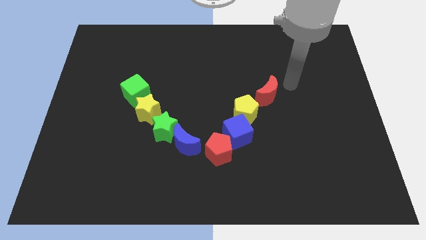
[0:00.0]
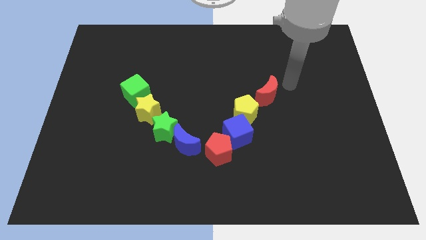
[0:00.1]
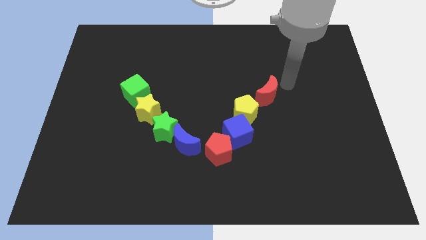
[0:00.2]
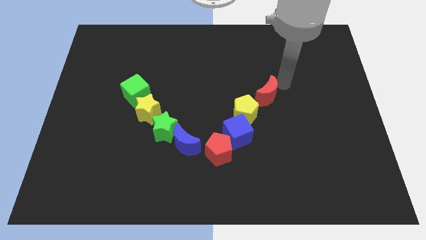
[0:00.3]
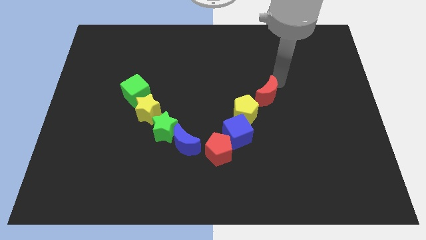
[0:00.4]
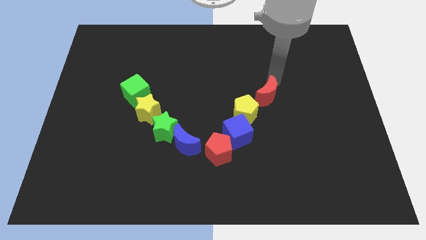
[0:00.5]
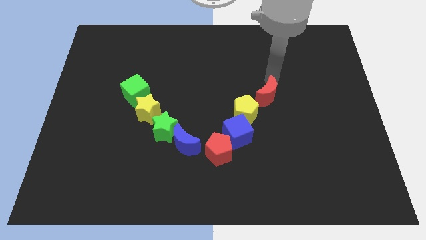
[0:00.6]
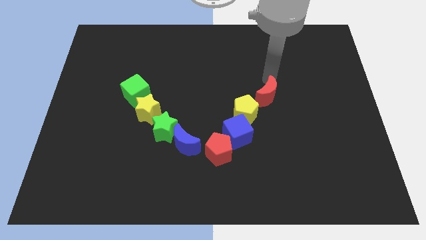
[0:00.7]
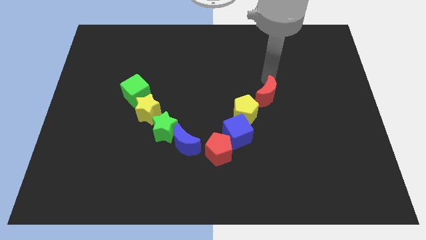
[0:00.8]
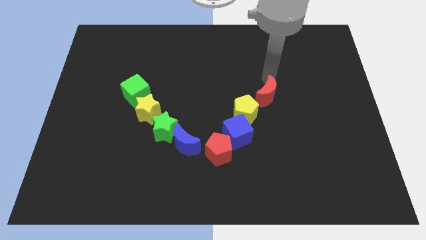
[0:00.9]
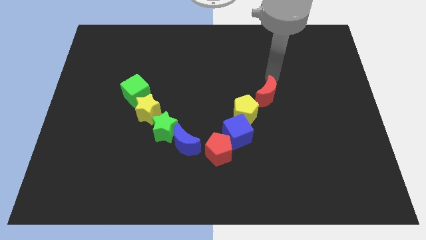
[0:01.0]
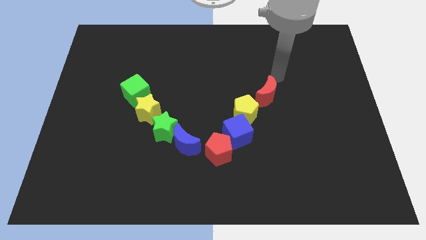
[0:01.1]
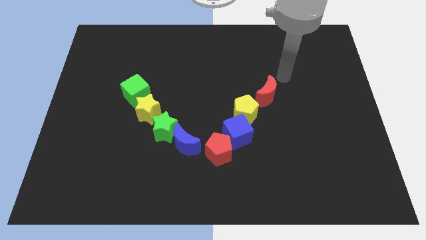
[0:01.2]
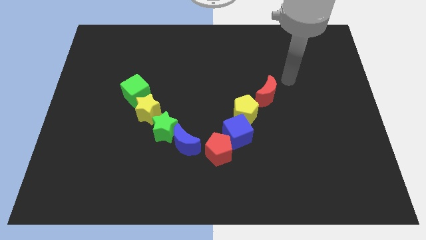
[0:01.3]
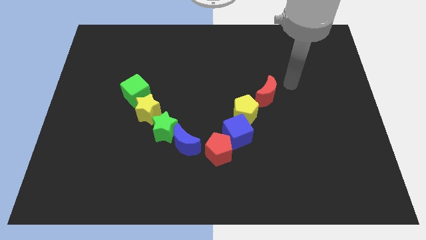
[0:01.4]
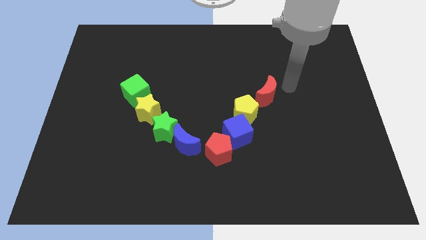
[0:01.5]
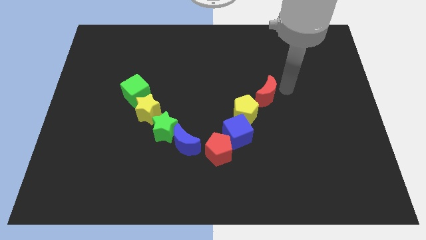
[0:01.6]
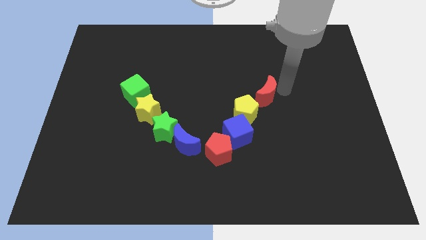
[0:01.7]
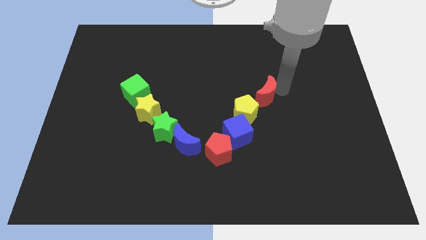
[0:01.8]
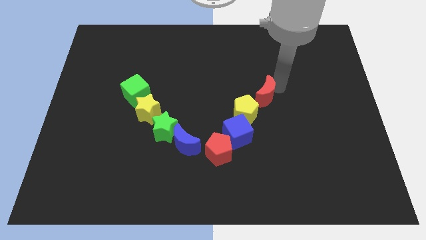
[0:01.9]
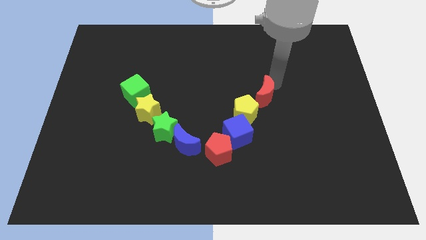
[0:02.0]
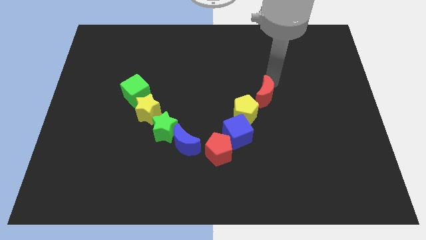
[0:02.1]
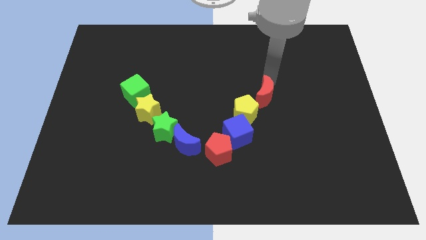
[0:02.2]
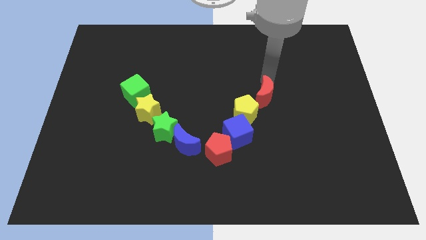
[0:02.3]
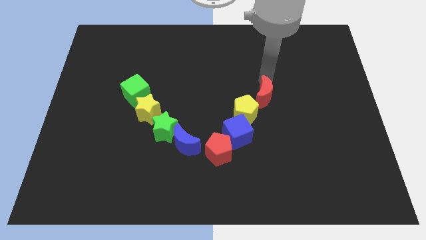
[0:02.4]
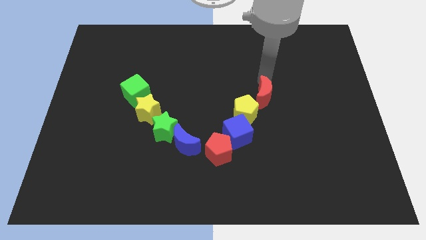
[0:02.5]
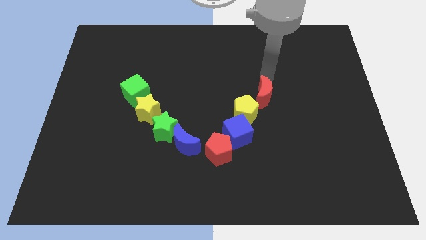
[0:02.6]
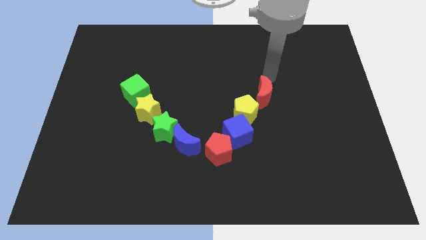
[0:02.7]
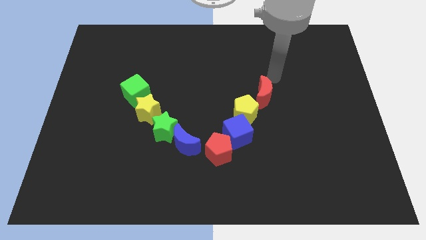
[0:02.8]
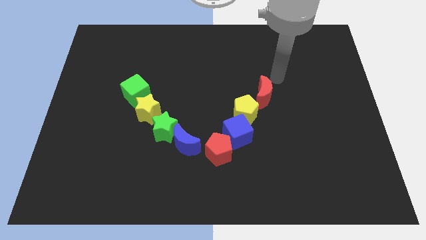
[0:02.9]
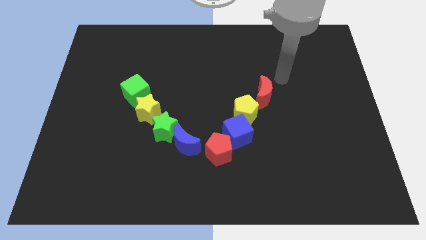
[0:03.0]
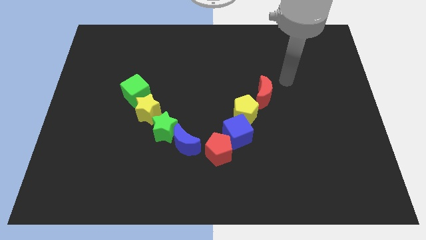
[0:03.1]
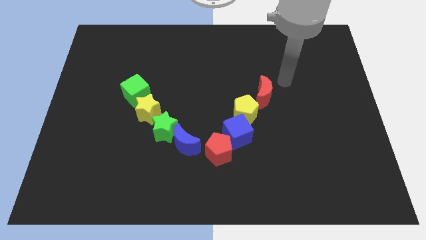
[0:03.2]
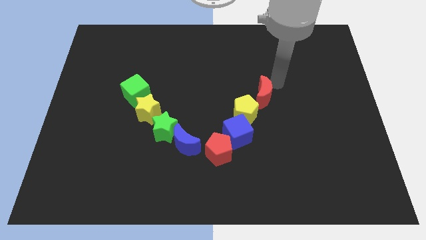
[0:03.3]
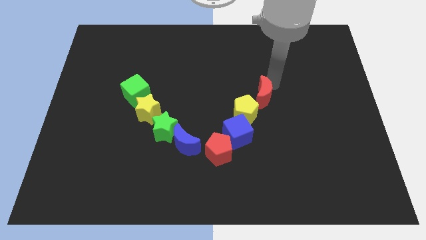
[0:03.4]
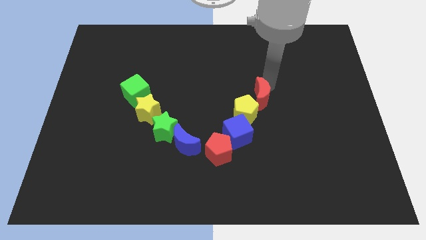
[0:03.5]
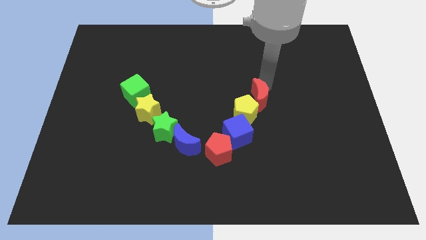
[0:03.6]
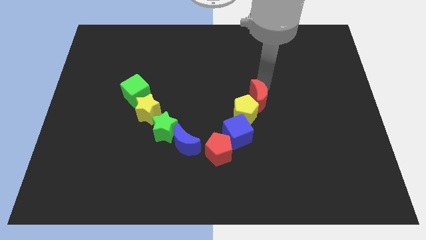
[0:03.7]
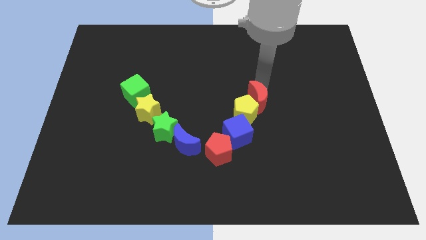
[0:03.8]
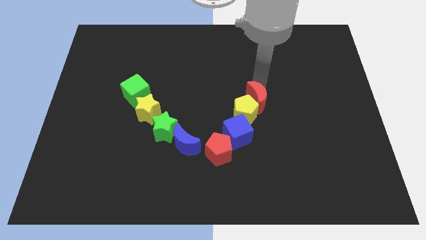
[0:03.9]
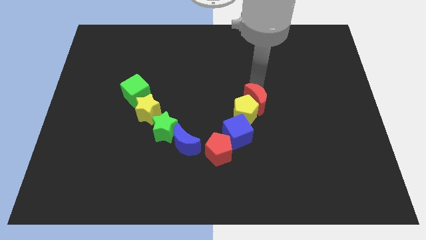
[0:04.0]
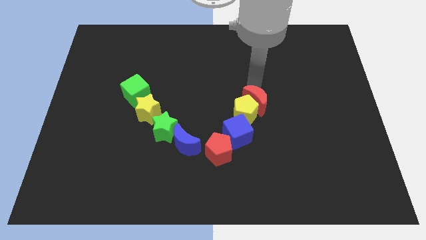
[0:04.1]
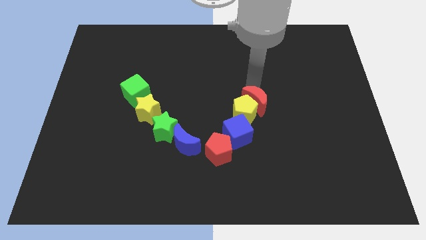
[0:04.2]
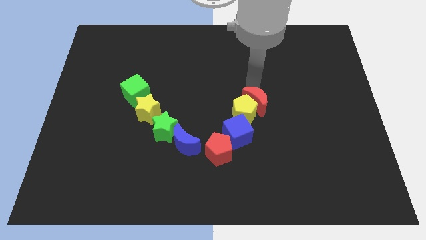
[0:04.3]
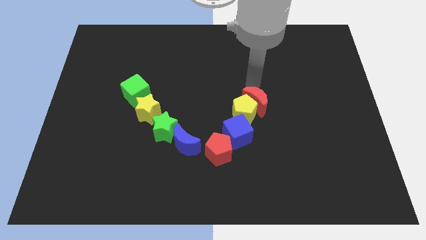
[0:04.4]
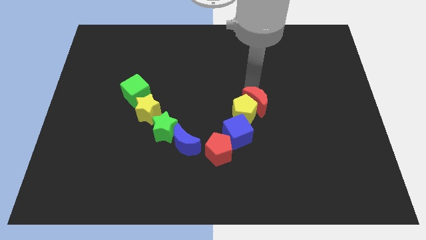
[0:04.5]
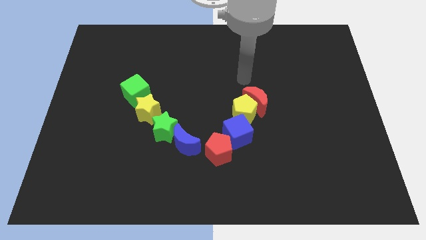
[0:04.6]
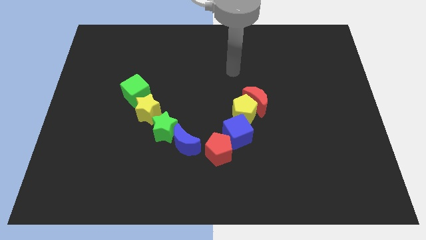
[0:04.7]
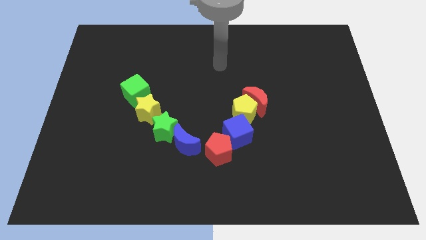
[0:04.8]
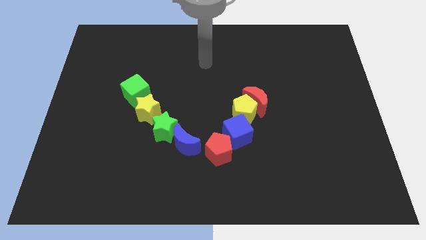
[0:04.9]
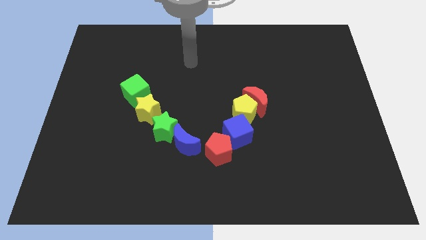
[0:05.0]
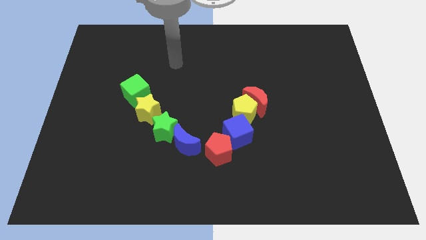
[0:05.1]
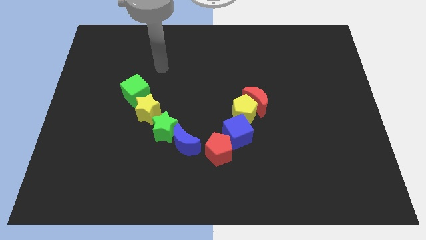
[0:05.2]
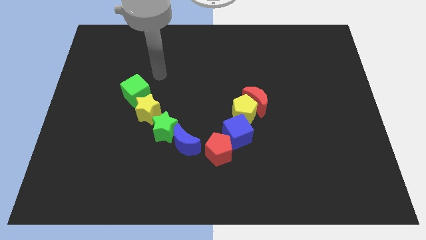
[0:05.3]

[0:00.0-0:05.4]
push the red moon into the yellow pentagon

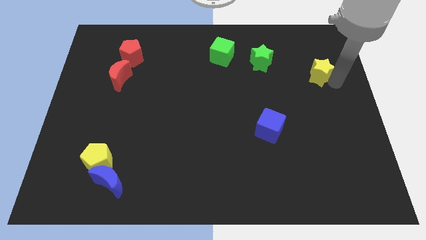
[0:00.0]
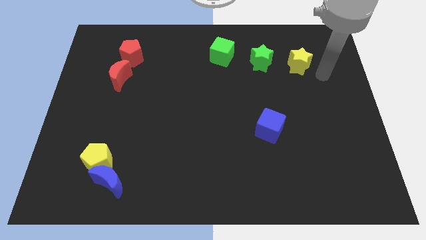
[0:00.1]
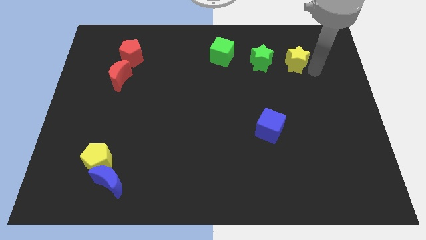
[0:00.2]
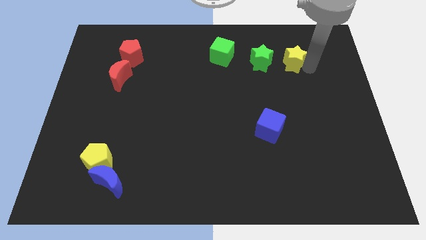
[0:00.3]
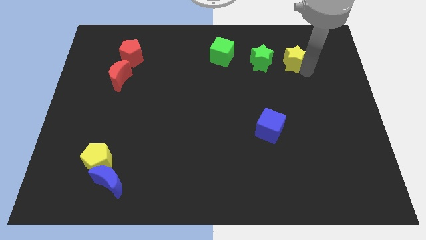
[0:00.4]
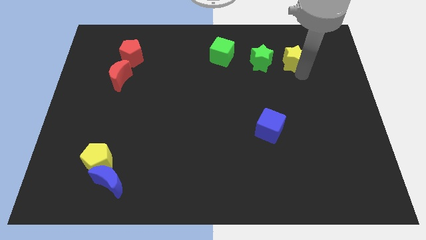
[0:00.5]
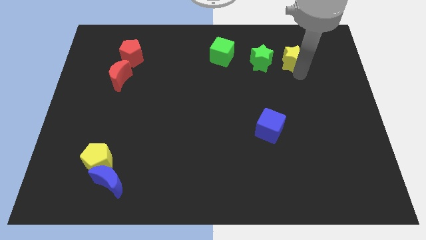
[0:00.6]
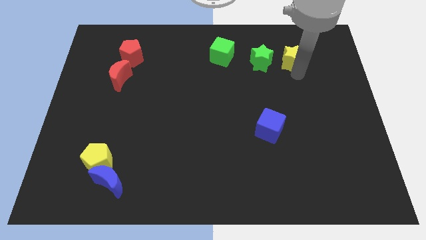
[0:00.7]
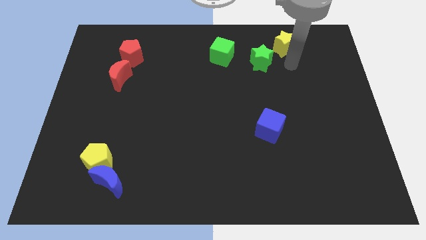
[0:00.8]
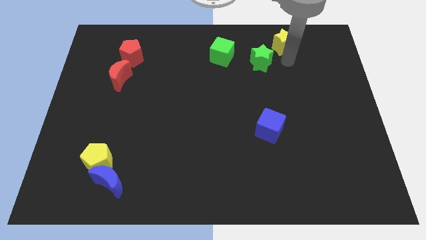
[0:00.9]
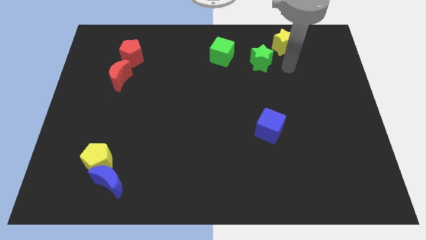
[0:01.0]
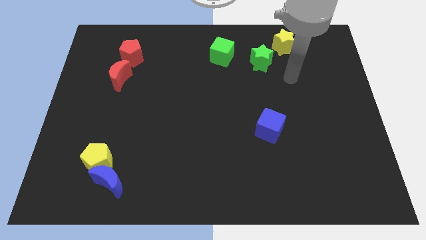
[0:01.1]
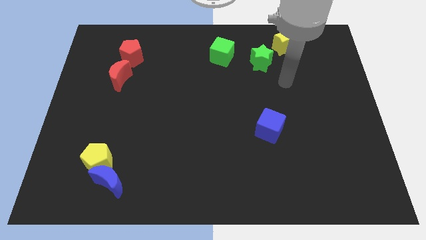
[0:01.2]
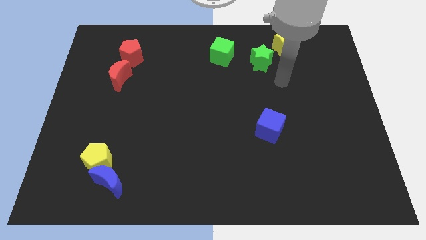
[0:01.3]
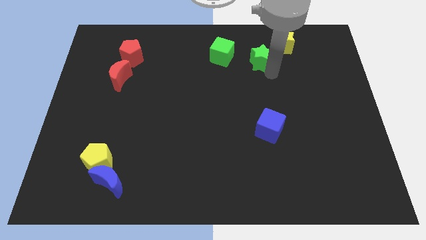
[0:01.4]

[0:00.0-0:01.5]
place the yellow star diagonal to the top right of green star

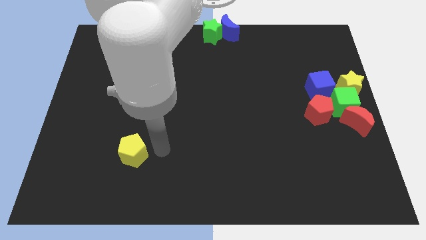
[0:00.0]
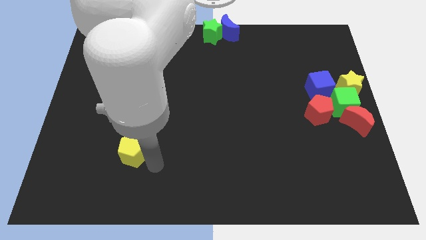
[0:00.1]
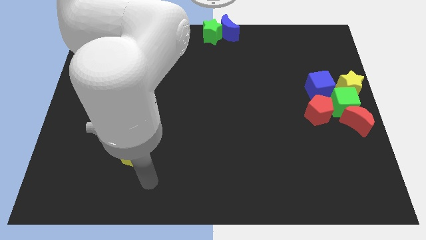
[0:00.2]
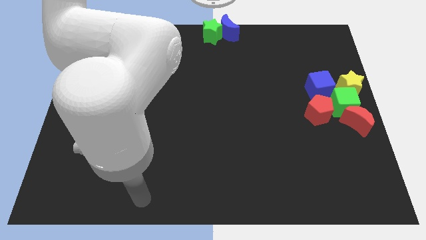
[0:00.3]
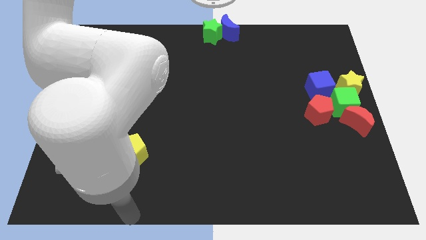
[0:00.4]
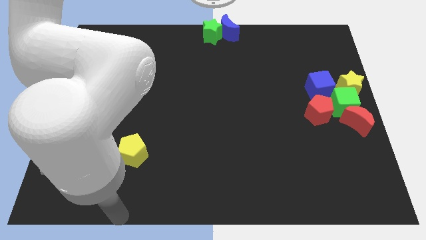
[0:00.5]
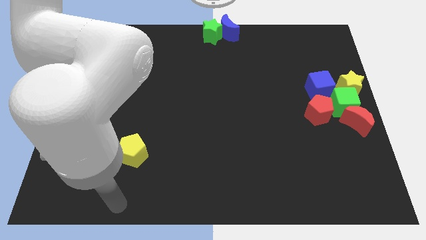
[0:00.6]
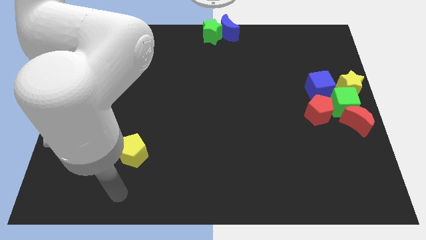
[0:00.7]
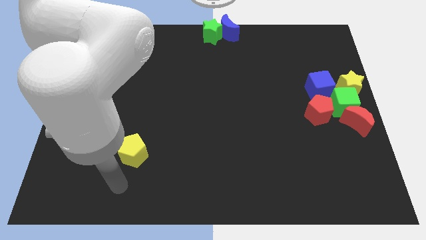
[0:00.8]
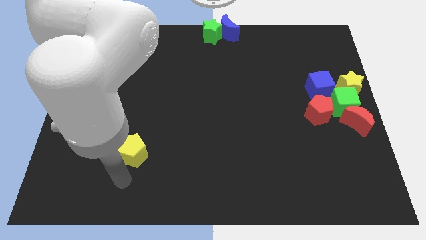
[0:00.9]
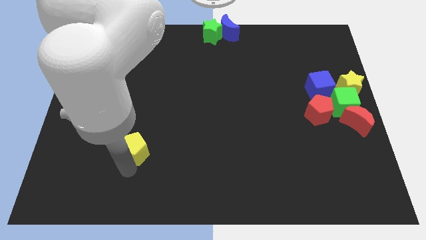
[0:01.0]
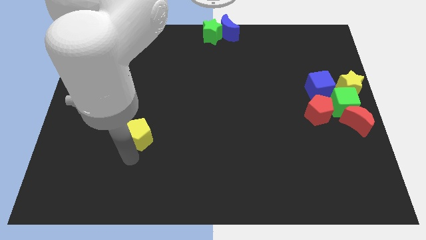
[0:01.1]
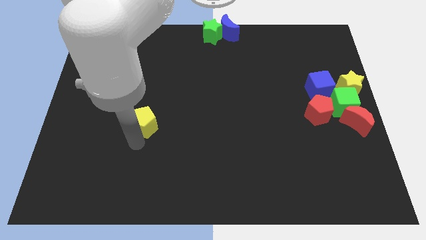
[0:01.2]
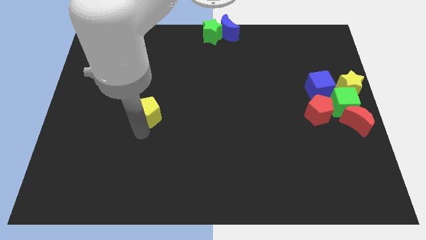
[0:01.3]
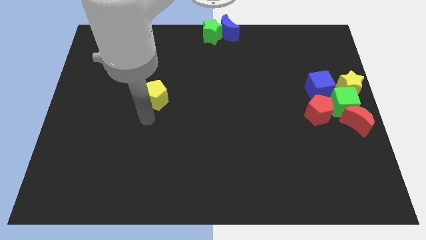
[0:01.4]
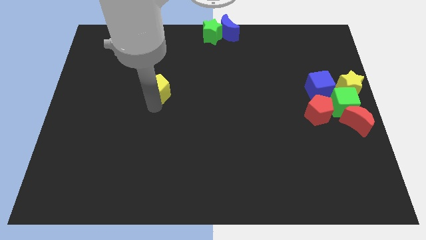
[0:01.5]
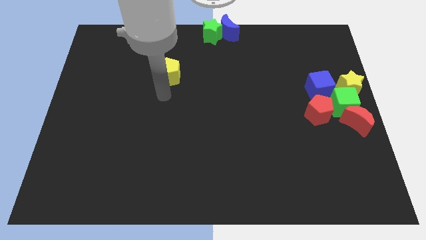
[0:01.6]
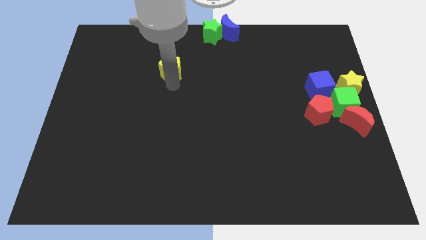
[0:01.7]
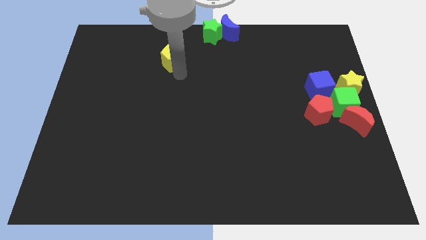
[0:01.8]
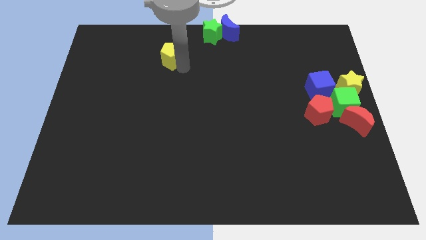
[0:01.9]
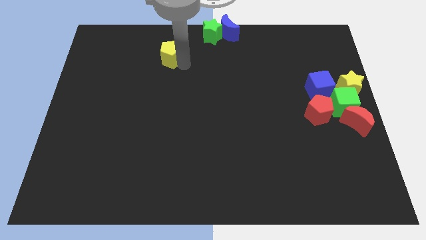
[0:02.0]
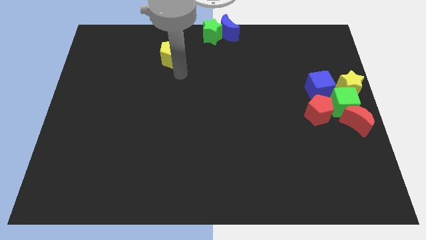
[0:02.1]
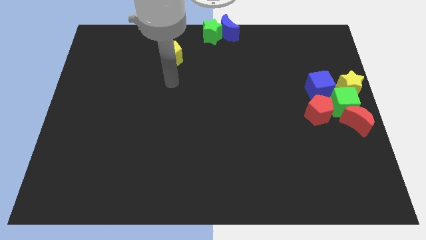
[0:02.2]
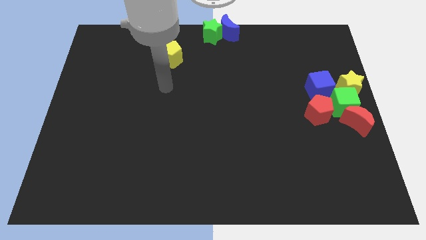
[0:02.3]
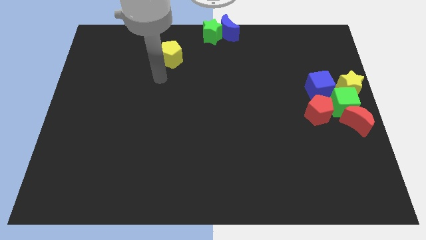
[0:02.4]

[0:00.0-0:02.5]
move the yellow pentagon to the bottom left of the green star
